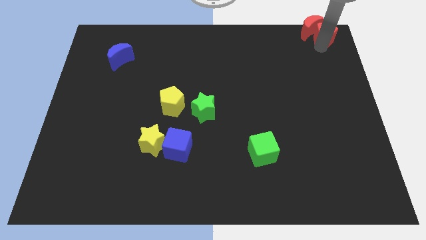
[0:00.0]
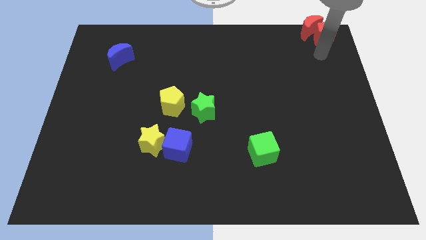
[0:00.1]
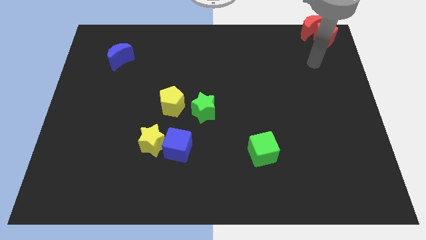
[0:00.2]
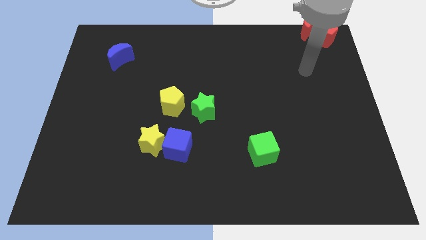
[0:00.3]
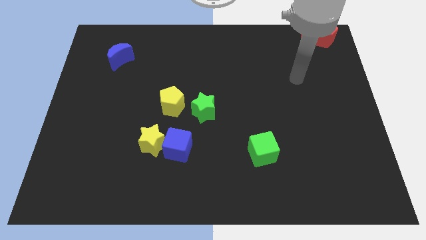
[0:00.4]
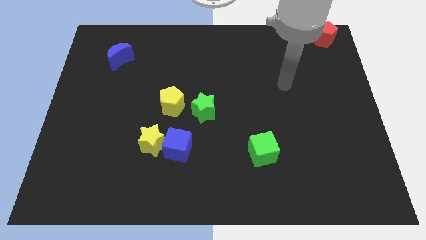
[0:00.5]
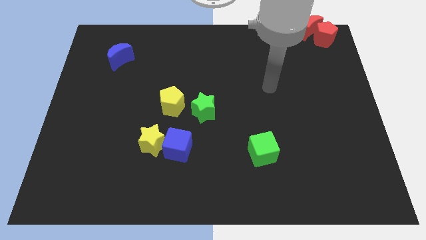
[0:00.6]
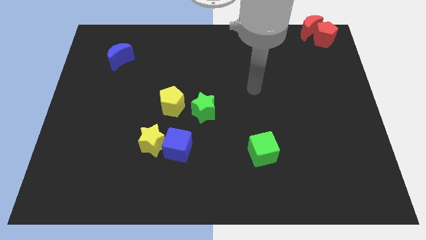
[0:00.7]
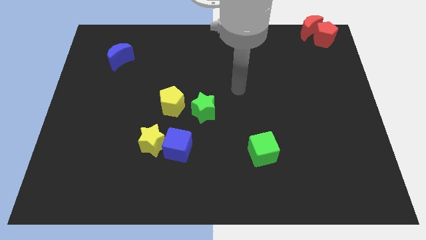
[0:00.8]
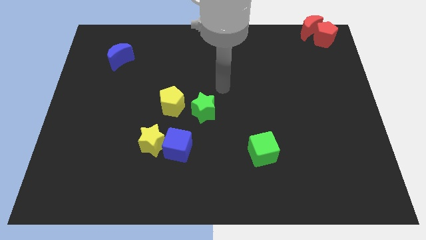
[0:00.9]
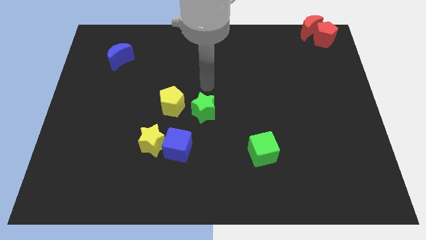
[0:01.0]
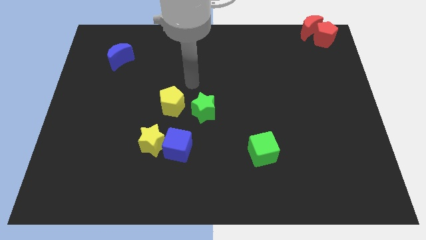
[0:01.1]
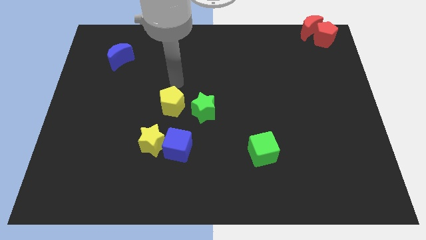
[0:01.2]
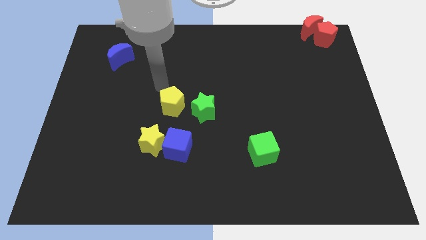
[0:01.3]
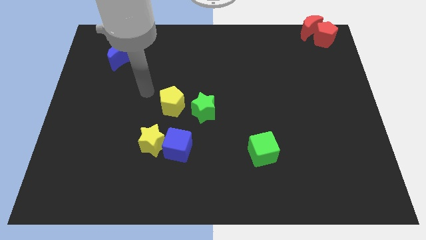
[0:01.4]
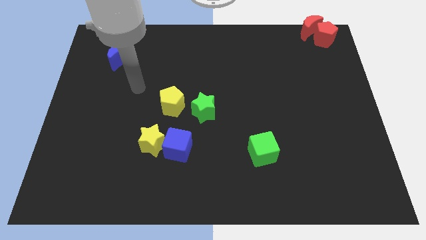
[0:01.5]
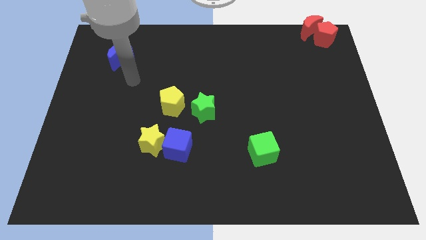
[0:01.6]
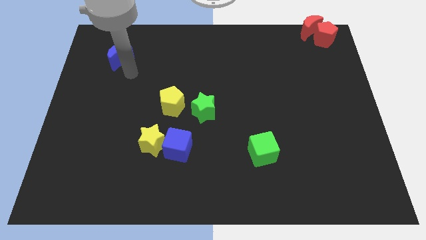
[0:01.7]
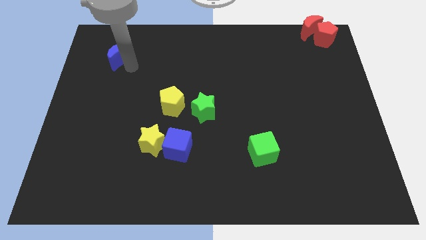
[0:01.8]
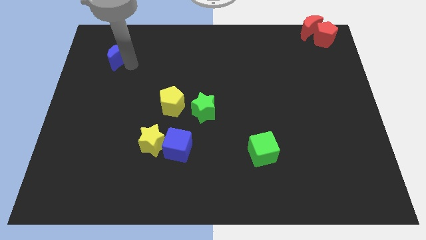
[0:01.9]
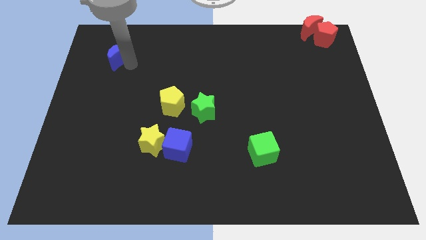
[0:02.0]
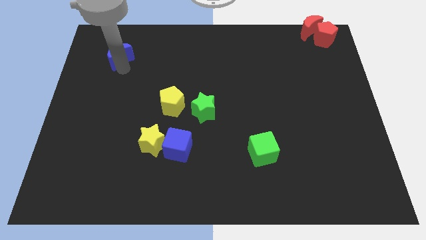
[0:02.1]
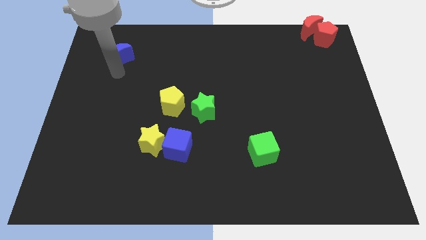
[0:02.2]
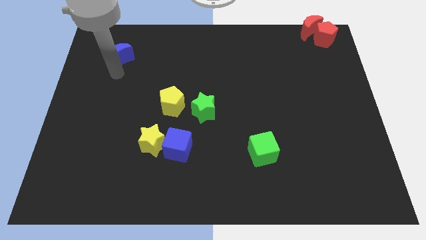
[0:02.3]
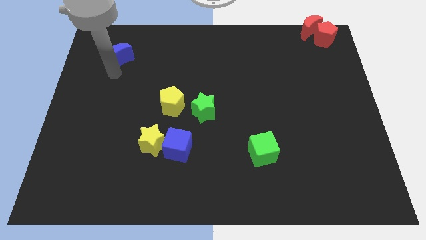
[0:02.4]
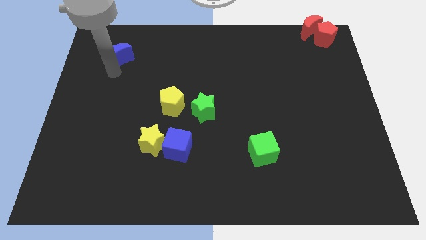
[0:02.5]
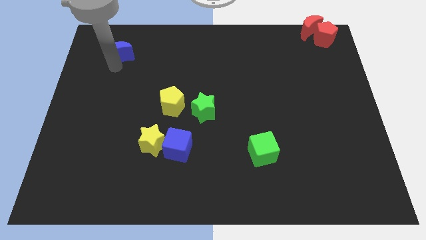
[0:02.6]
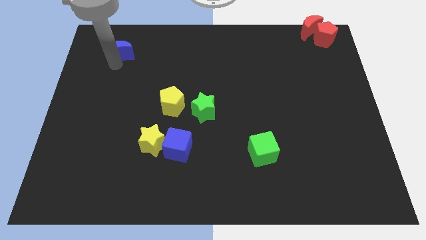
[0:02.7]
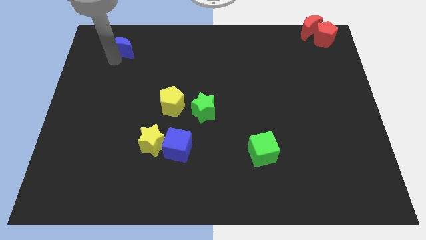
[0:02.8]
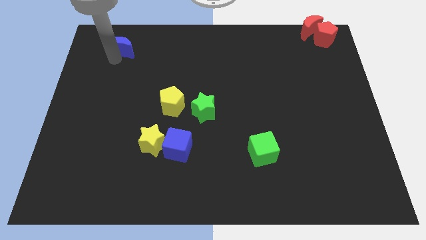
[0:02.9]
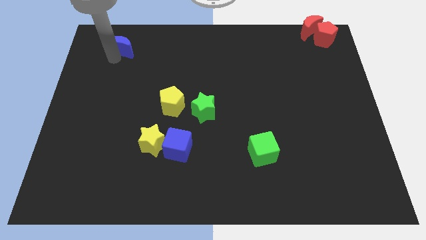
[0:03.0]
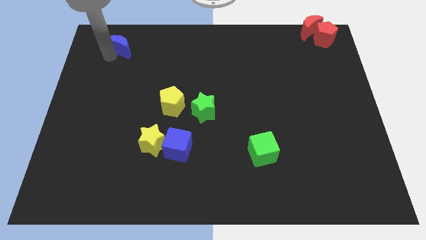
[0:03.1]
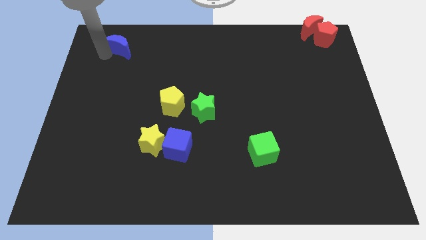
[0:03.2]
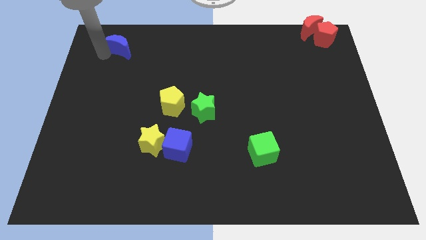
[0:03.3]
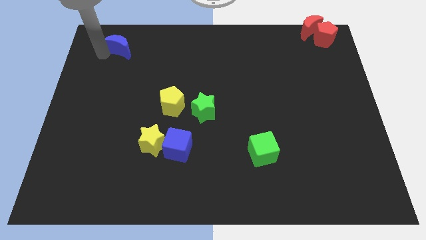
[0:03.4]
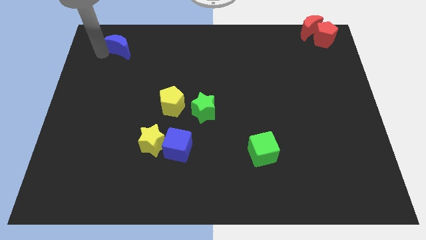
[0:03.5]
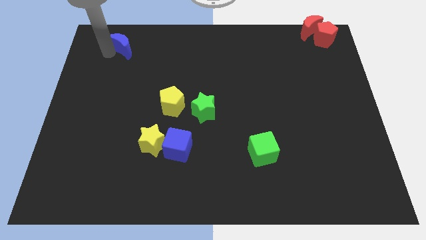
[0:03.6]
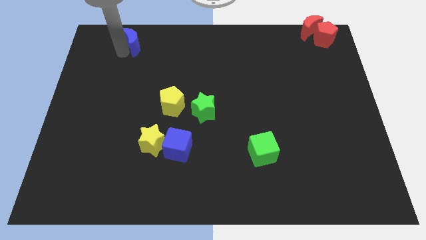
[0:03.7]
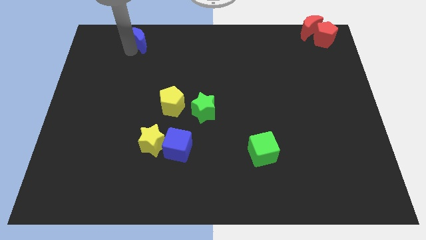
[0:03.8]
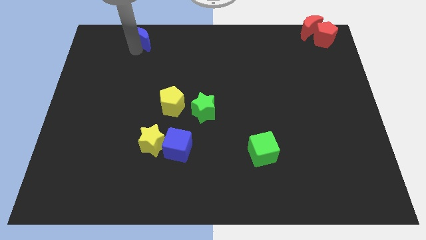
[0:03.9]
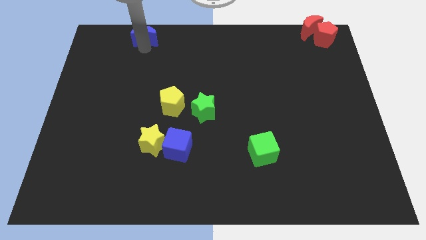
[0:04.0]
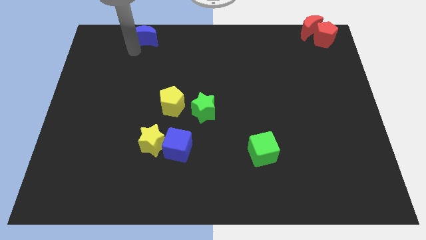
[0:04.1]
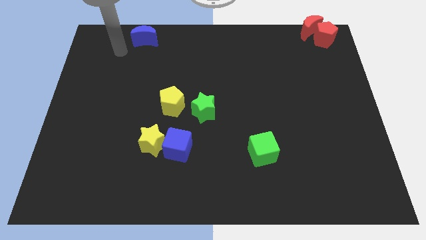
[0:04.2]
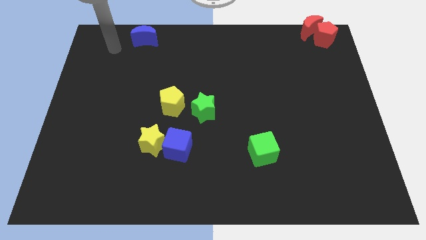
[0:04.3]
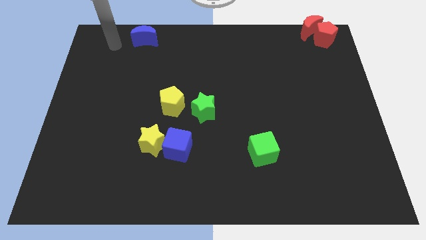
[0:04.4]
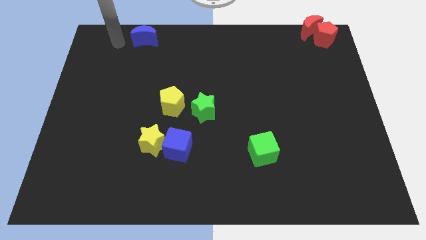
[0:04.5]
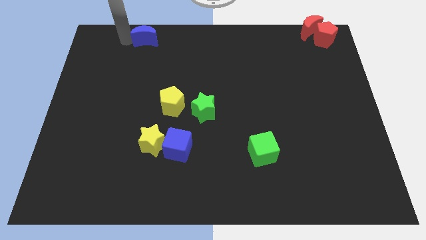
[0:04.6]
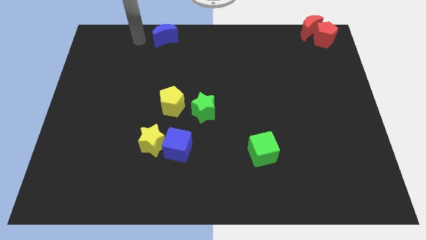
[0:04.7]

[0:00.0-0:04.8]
push the blue crescent towards the top side of the board

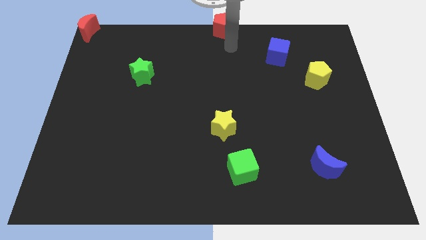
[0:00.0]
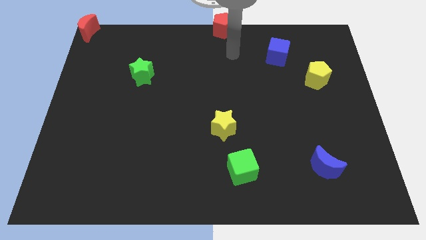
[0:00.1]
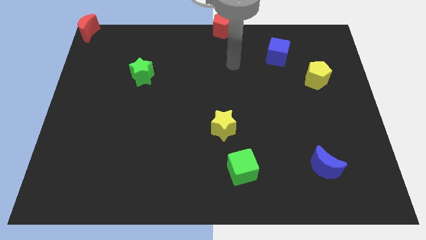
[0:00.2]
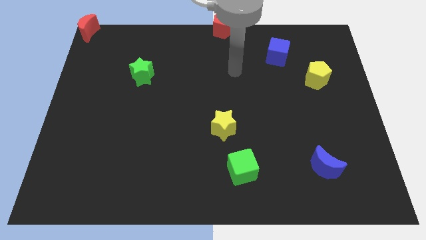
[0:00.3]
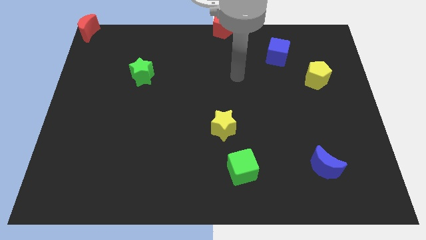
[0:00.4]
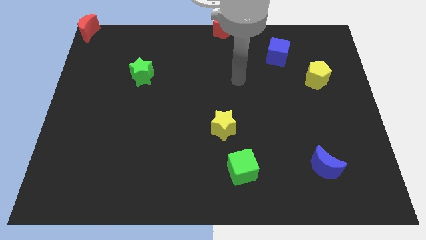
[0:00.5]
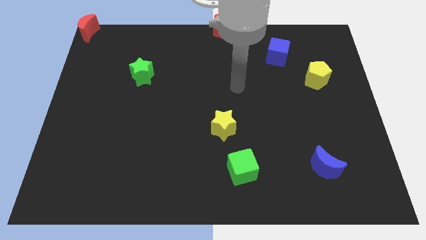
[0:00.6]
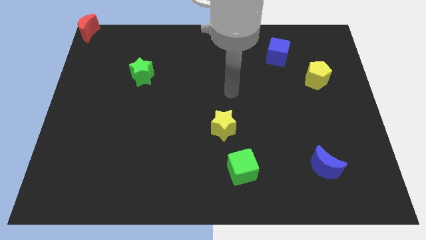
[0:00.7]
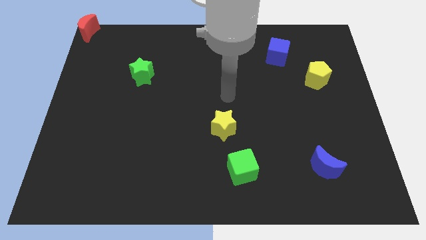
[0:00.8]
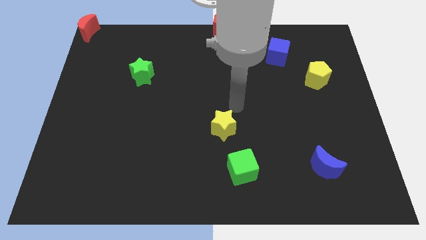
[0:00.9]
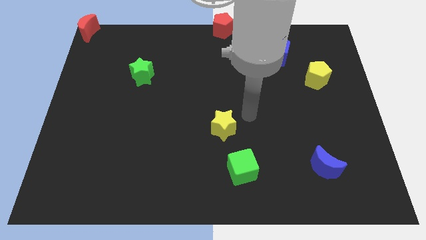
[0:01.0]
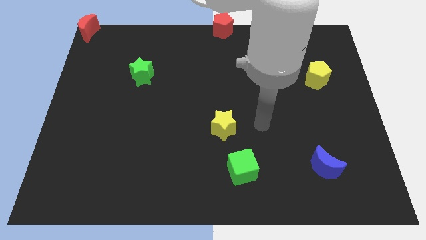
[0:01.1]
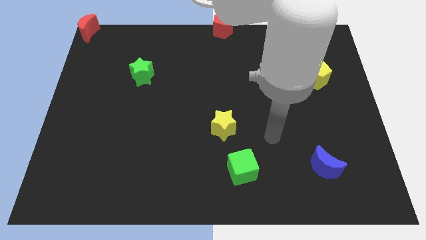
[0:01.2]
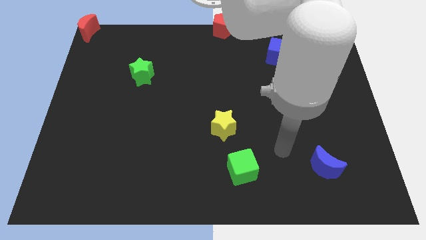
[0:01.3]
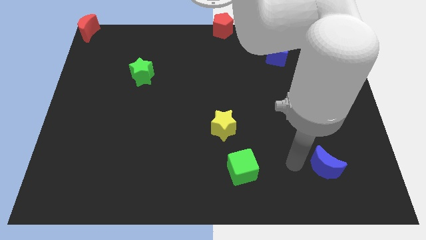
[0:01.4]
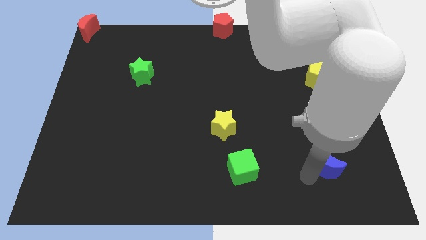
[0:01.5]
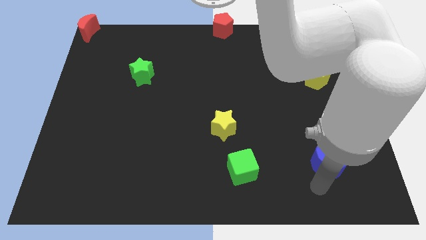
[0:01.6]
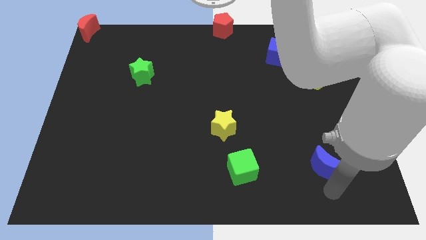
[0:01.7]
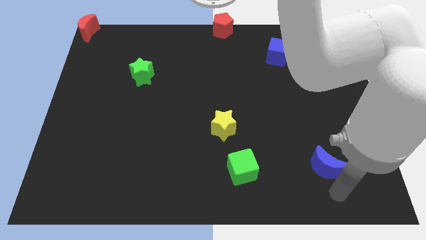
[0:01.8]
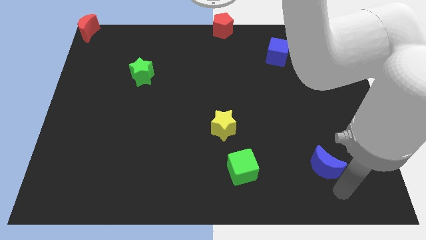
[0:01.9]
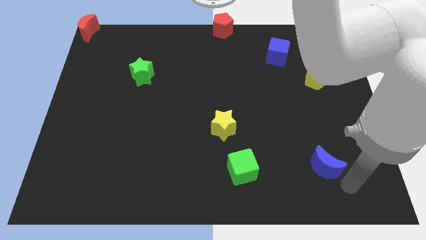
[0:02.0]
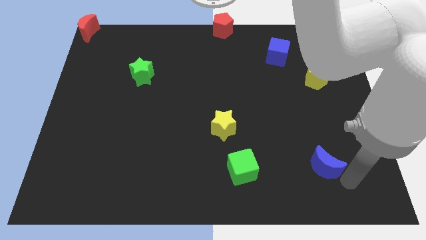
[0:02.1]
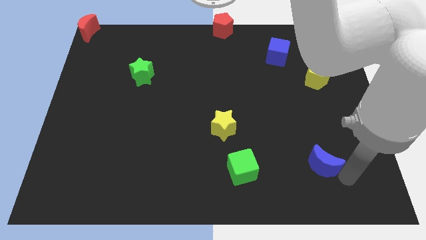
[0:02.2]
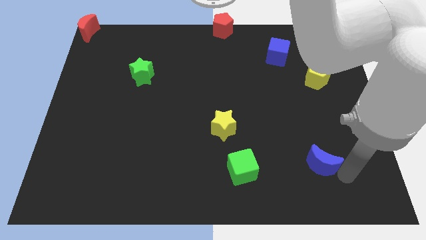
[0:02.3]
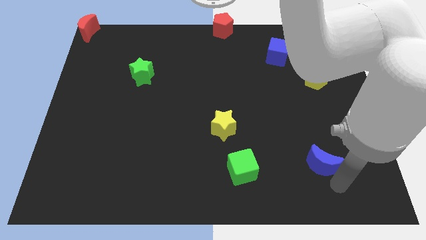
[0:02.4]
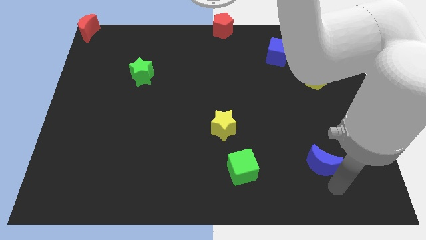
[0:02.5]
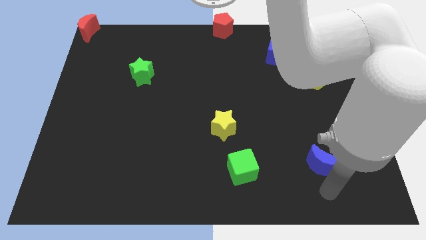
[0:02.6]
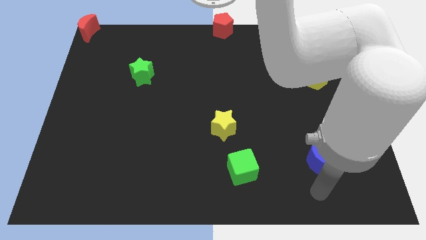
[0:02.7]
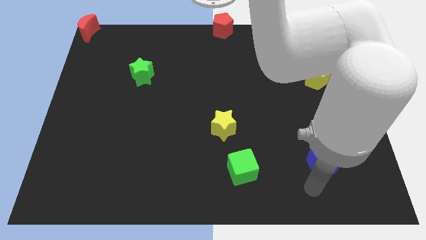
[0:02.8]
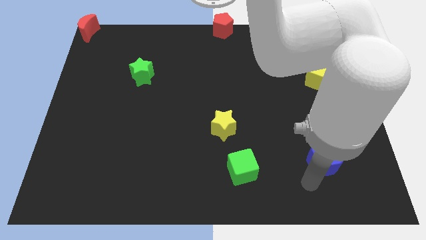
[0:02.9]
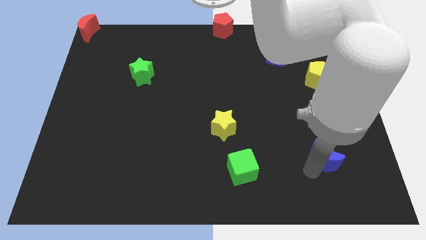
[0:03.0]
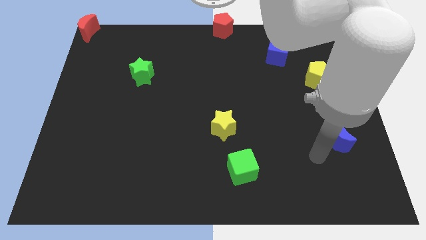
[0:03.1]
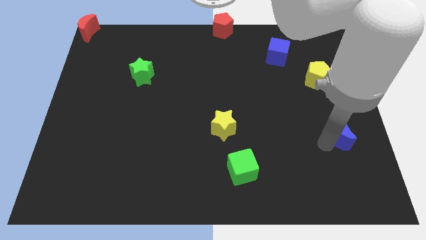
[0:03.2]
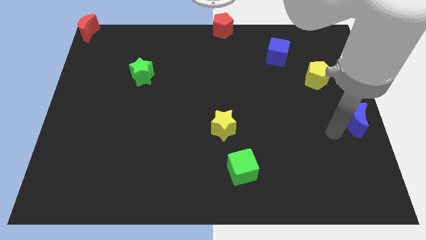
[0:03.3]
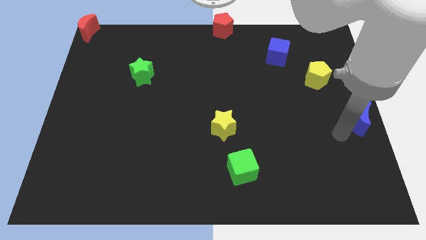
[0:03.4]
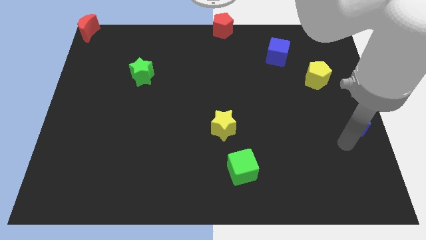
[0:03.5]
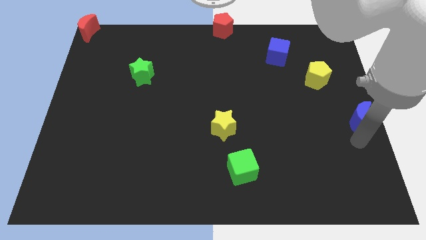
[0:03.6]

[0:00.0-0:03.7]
move the blue moon to the bottom right of the yellow pentagon

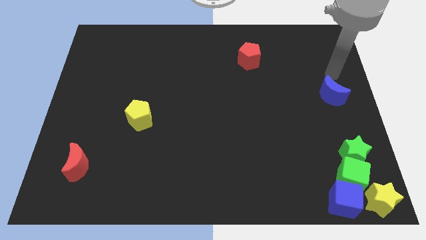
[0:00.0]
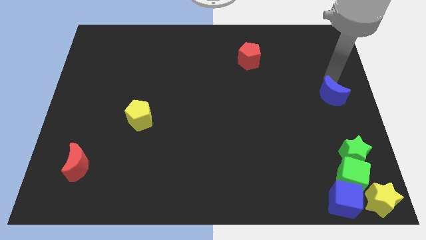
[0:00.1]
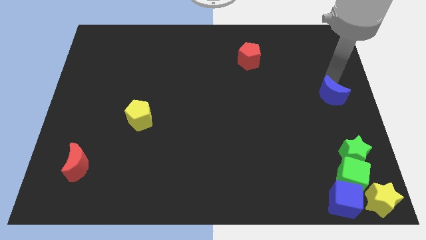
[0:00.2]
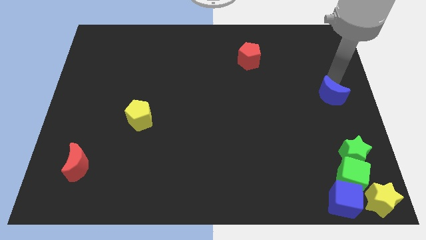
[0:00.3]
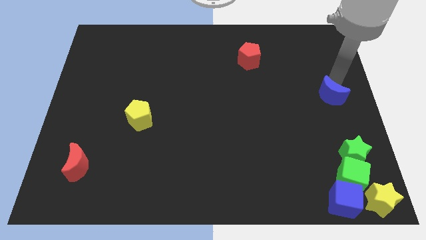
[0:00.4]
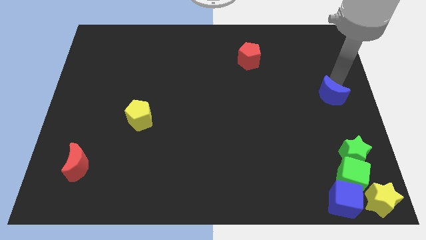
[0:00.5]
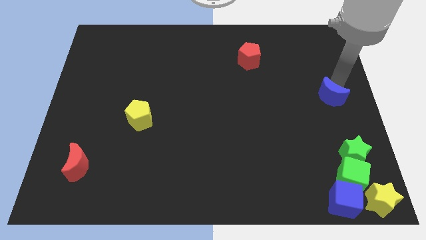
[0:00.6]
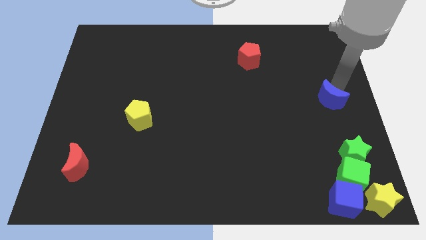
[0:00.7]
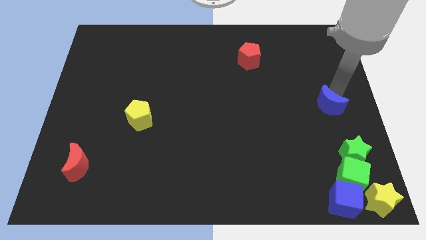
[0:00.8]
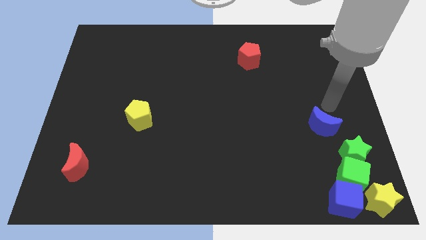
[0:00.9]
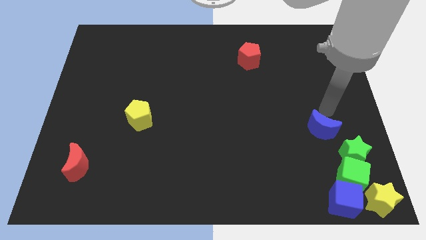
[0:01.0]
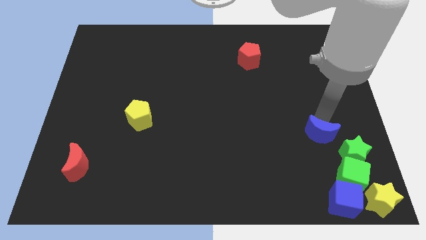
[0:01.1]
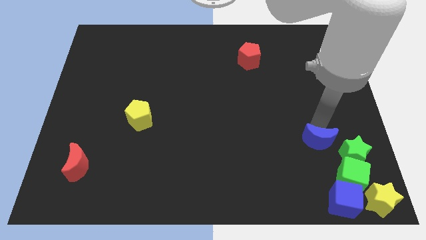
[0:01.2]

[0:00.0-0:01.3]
place the blue moon diagonally left to the star
